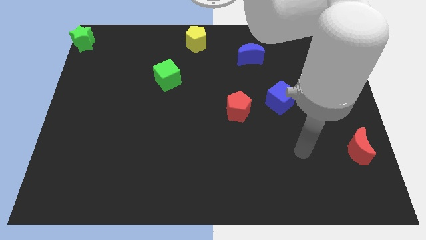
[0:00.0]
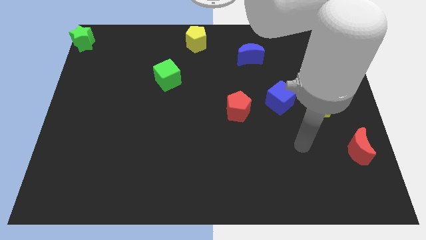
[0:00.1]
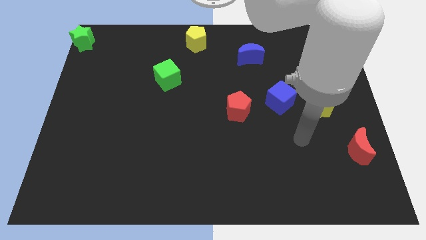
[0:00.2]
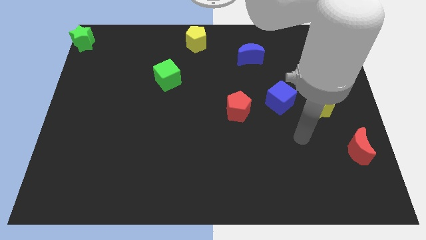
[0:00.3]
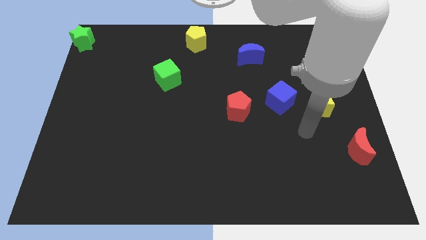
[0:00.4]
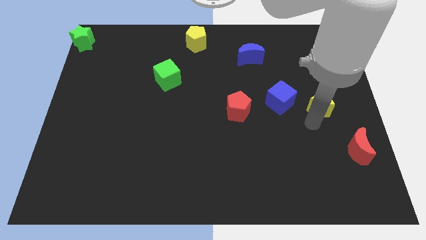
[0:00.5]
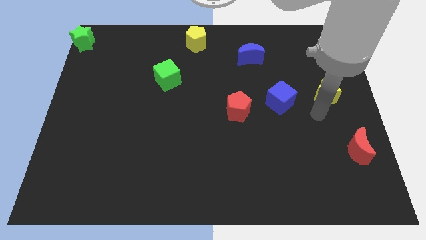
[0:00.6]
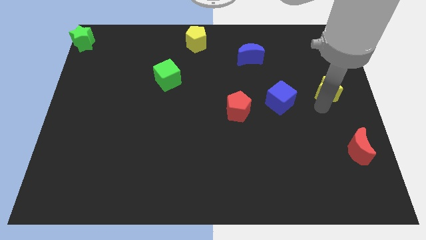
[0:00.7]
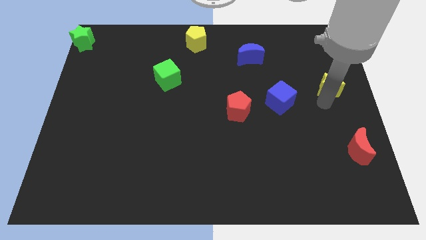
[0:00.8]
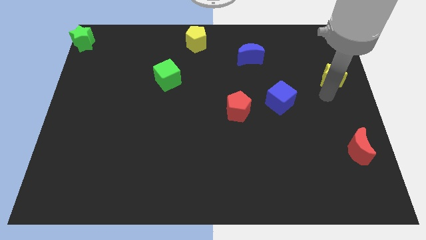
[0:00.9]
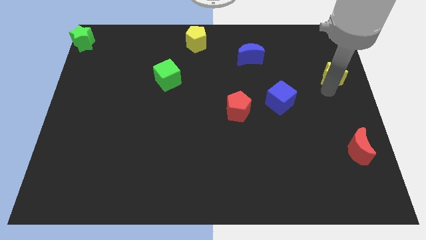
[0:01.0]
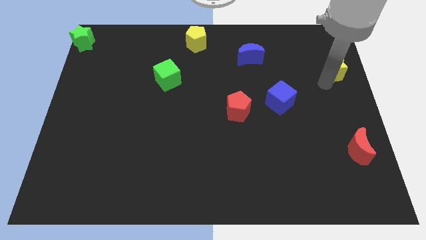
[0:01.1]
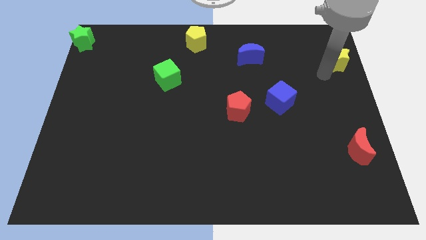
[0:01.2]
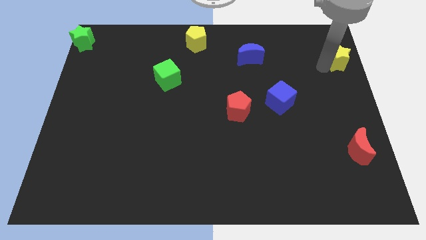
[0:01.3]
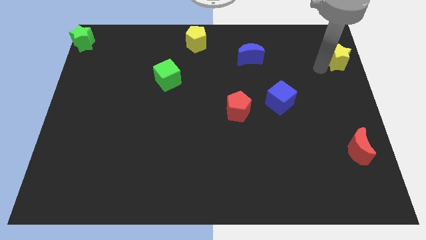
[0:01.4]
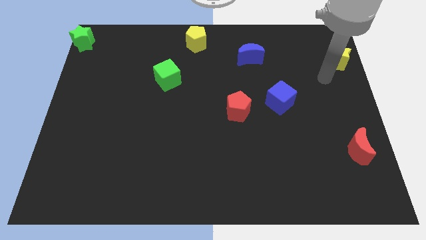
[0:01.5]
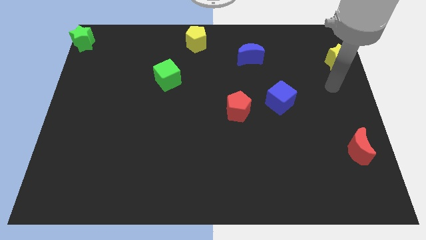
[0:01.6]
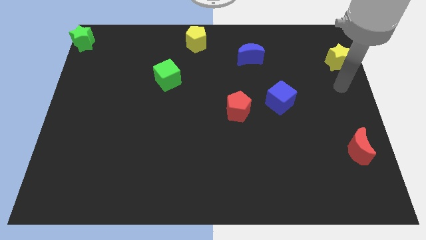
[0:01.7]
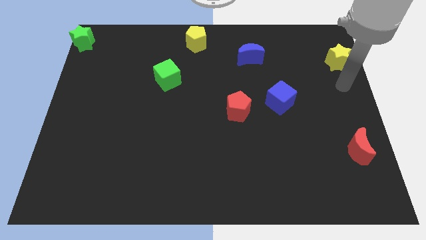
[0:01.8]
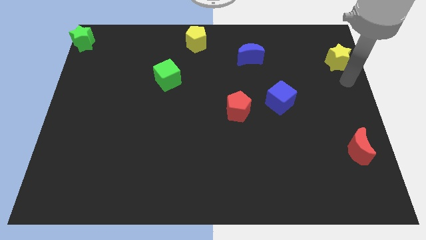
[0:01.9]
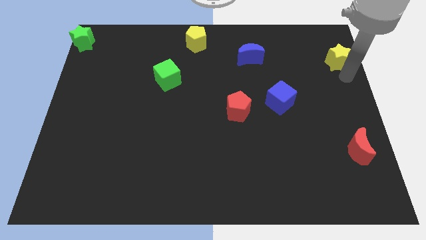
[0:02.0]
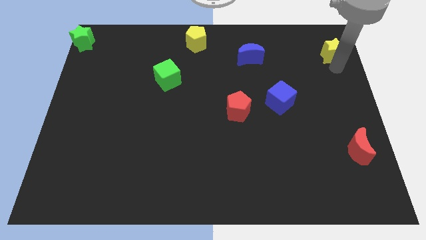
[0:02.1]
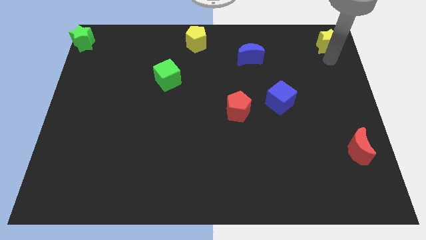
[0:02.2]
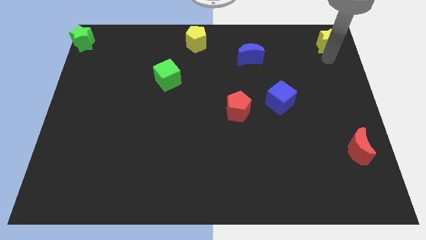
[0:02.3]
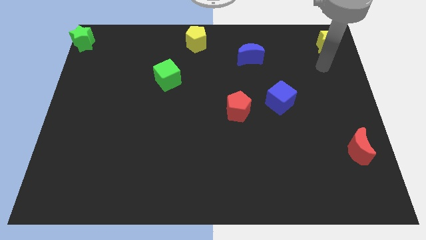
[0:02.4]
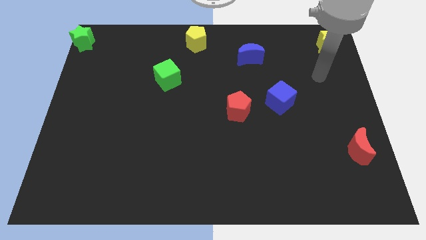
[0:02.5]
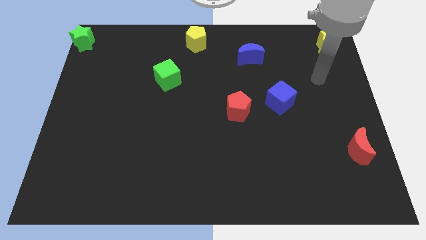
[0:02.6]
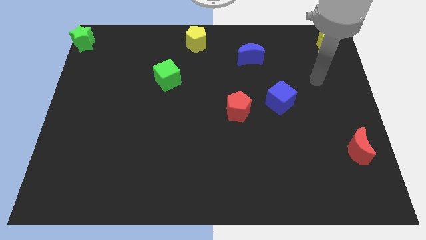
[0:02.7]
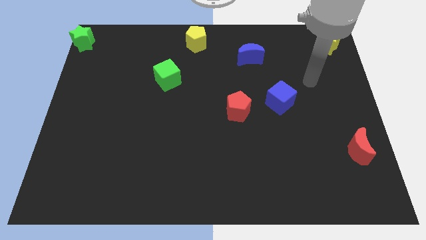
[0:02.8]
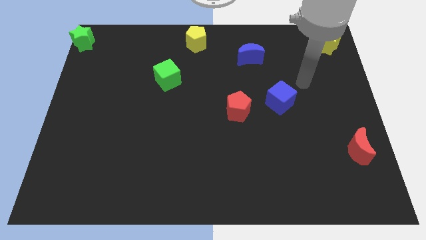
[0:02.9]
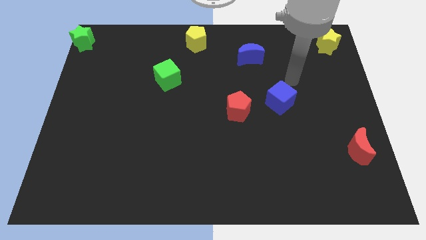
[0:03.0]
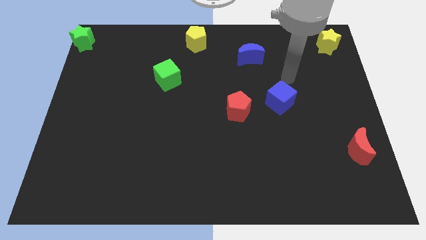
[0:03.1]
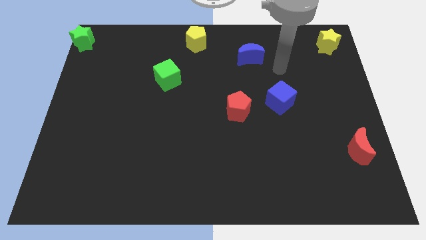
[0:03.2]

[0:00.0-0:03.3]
move yellow star to the top right corner

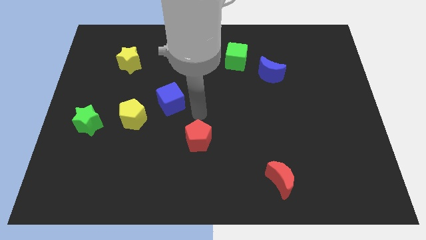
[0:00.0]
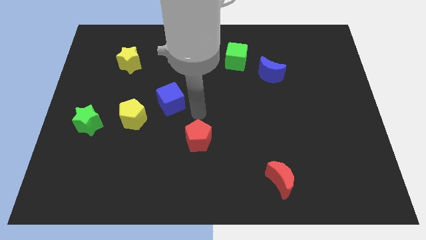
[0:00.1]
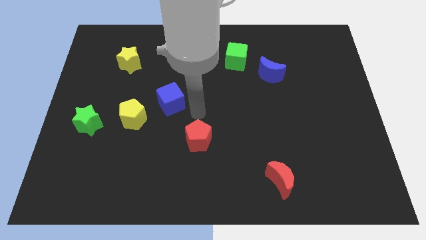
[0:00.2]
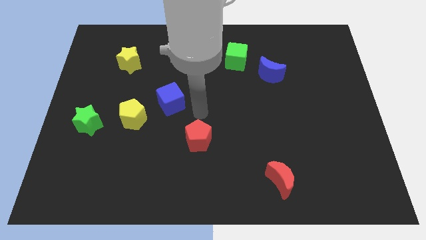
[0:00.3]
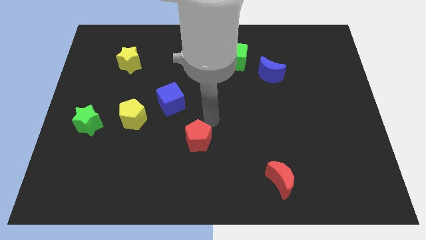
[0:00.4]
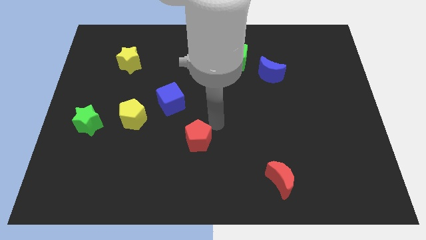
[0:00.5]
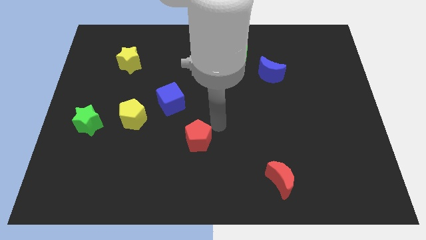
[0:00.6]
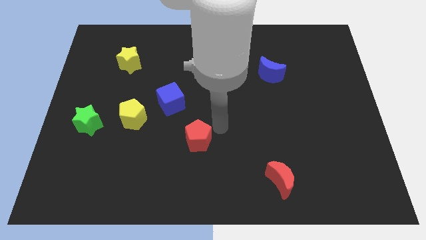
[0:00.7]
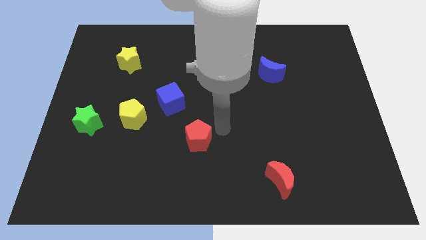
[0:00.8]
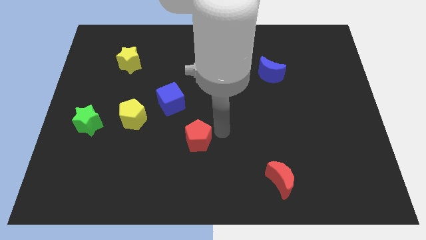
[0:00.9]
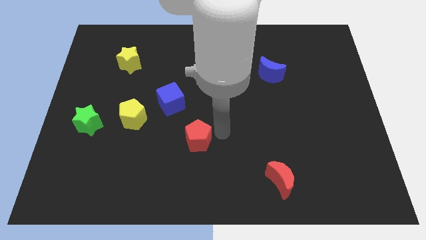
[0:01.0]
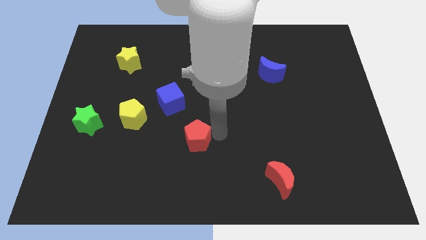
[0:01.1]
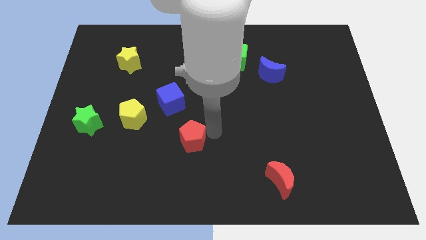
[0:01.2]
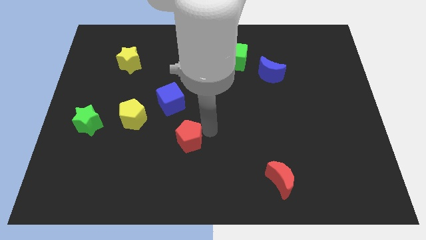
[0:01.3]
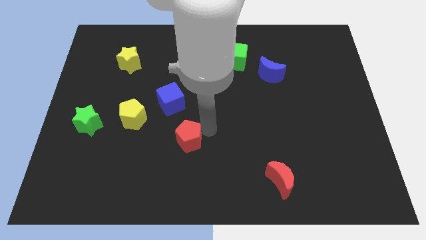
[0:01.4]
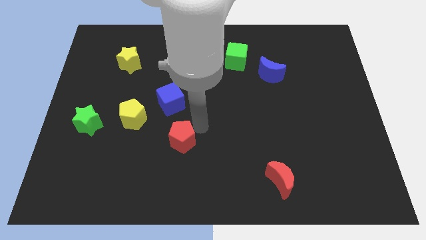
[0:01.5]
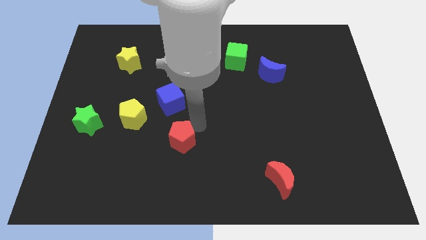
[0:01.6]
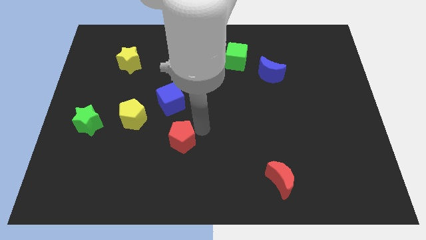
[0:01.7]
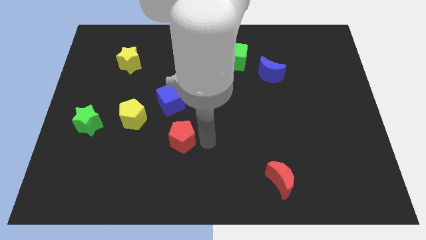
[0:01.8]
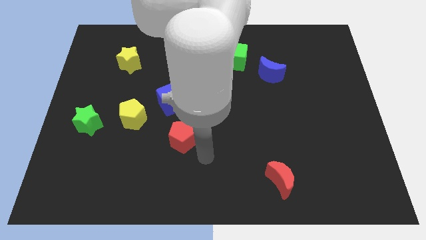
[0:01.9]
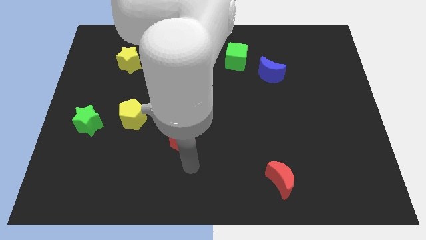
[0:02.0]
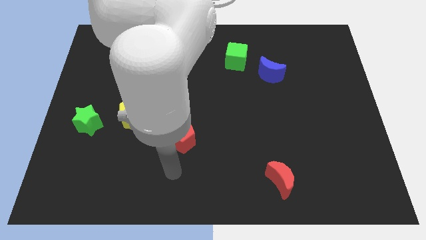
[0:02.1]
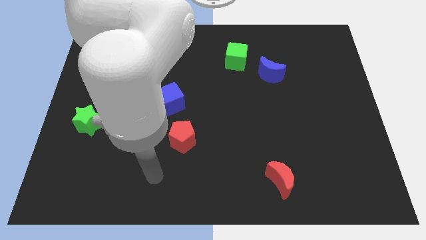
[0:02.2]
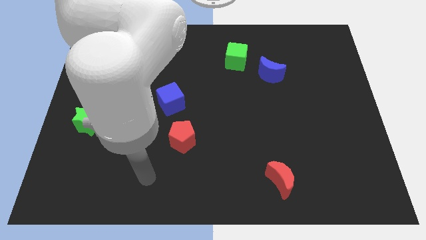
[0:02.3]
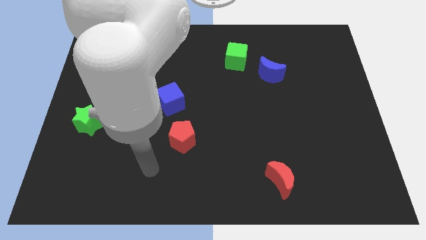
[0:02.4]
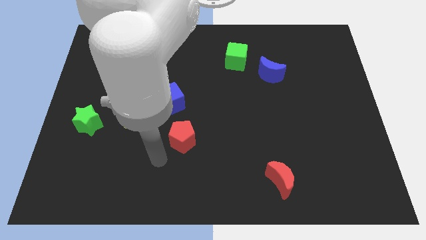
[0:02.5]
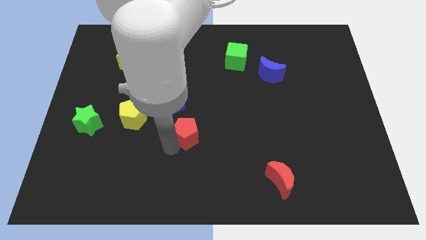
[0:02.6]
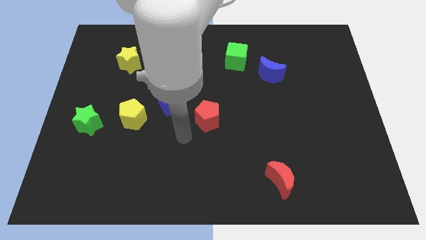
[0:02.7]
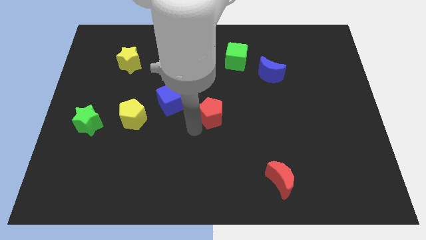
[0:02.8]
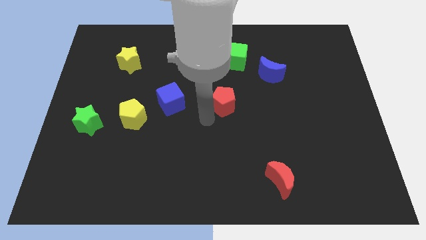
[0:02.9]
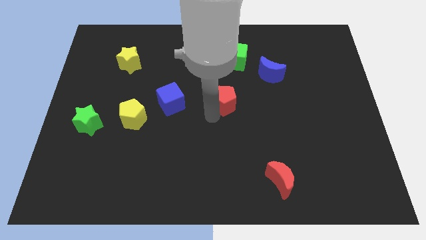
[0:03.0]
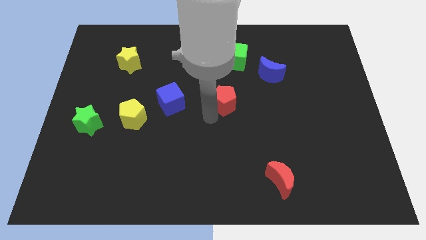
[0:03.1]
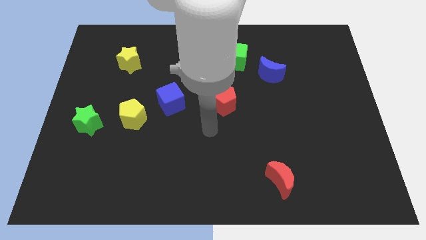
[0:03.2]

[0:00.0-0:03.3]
push red pentagon below green cube

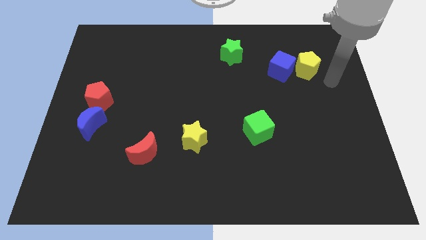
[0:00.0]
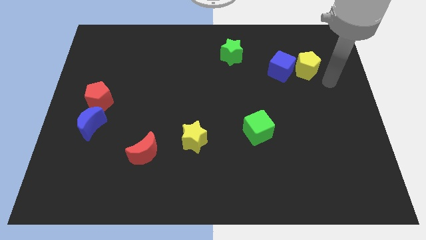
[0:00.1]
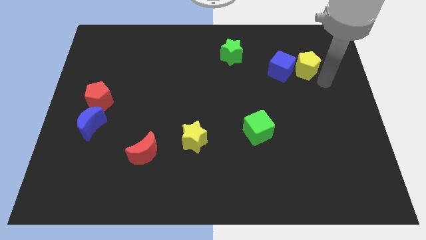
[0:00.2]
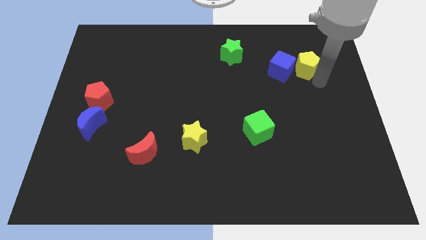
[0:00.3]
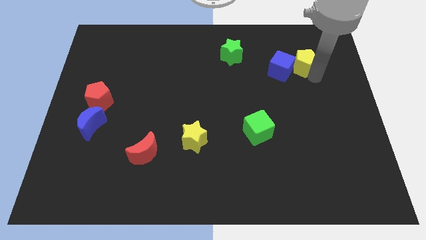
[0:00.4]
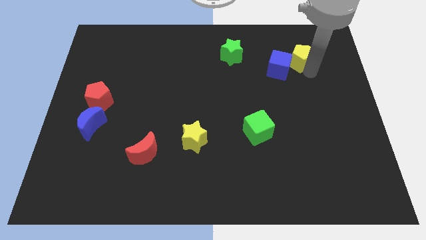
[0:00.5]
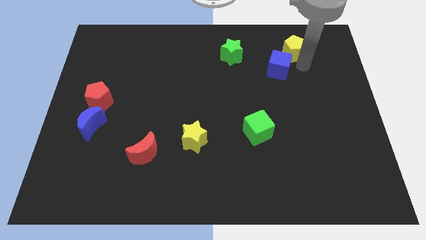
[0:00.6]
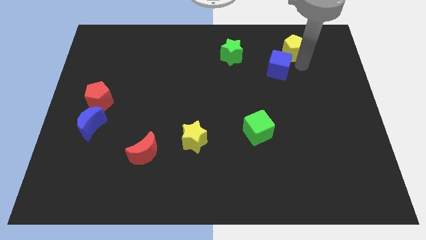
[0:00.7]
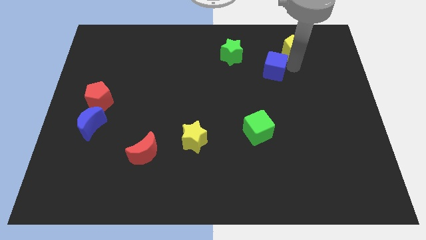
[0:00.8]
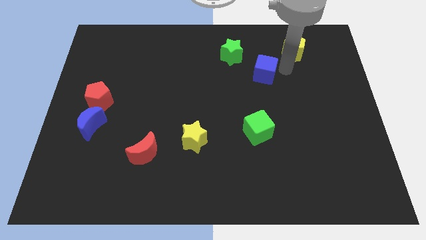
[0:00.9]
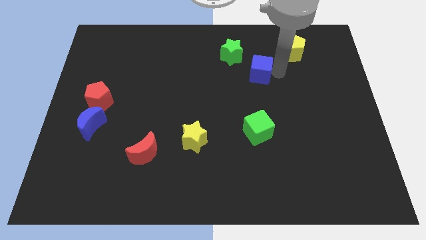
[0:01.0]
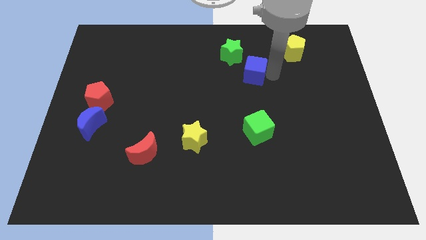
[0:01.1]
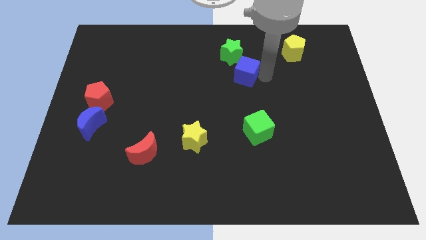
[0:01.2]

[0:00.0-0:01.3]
separate the blue cube from the yellow pentagon

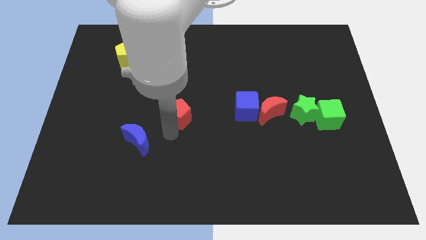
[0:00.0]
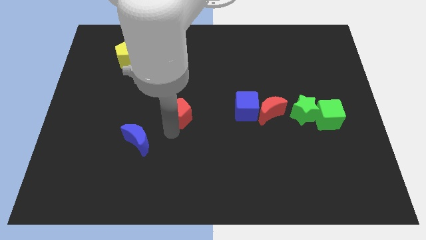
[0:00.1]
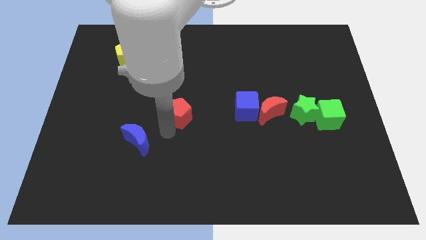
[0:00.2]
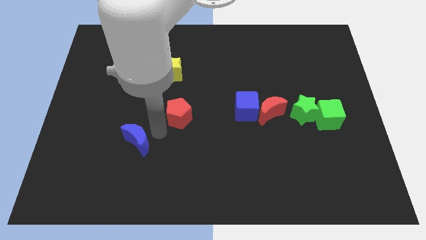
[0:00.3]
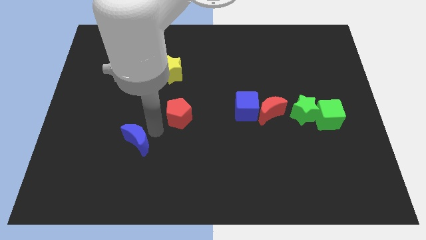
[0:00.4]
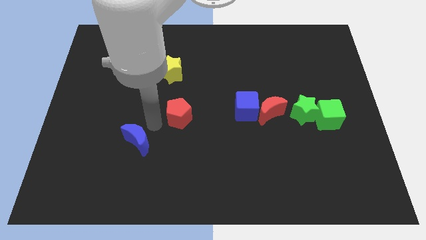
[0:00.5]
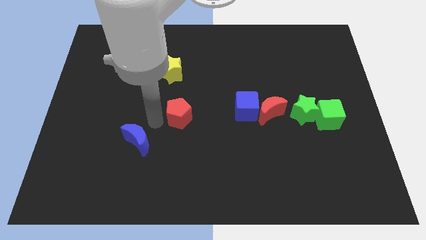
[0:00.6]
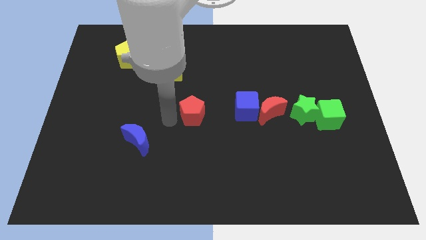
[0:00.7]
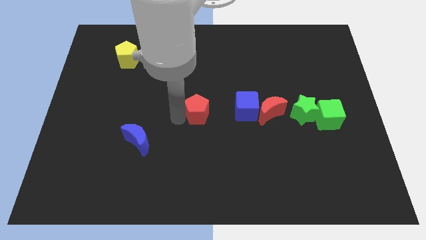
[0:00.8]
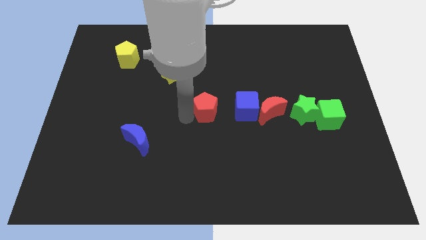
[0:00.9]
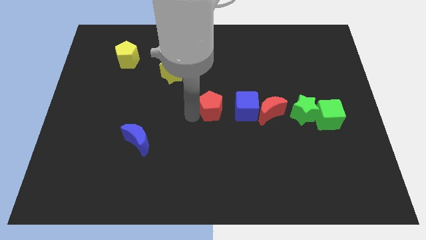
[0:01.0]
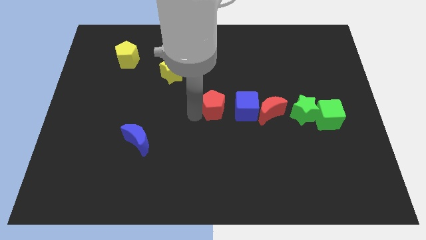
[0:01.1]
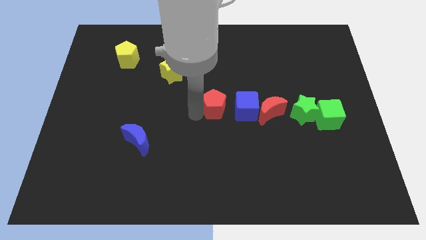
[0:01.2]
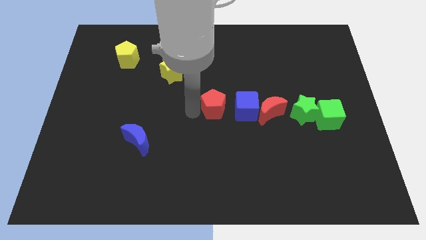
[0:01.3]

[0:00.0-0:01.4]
slide the red pentagon to the left of the blue cube
